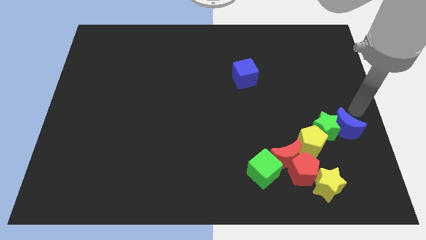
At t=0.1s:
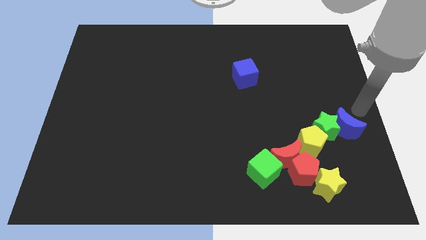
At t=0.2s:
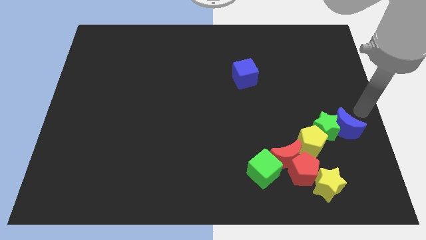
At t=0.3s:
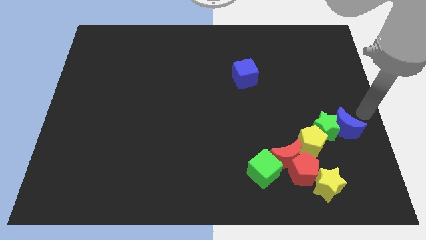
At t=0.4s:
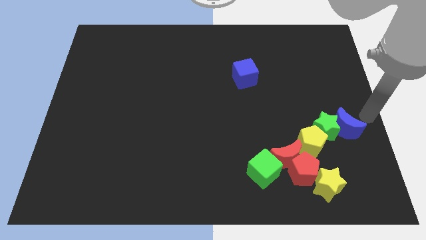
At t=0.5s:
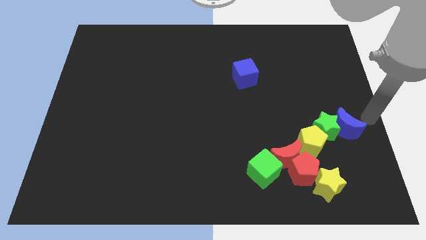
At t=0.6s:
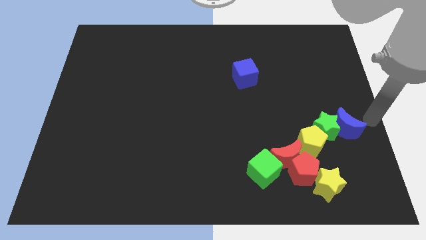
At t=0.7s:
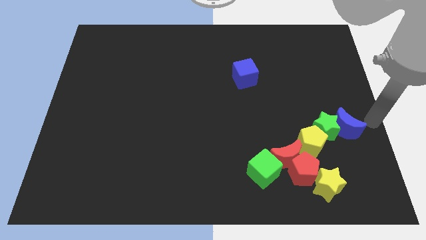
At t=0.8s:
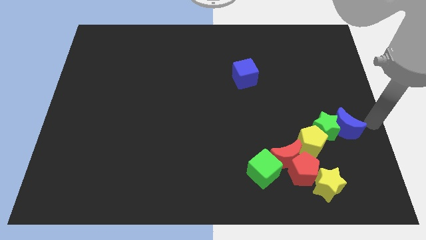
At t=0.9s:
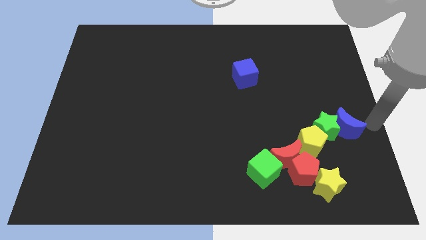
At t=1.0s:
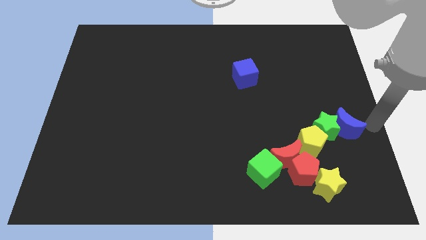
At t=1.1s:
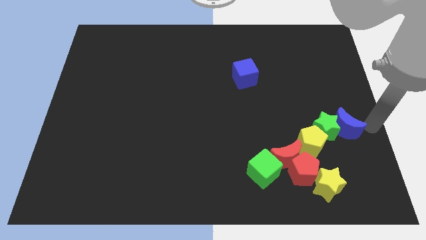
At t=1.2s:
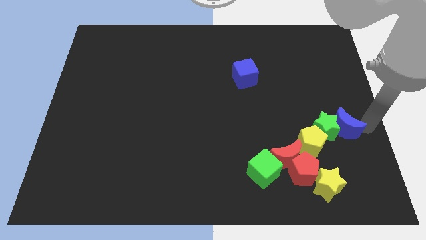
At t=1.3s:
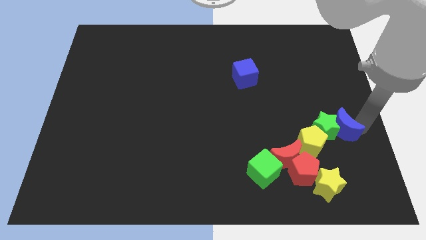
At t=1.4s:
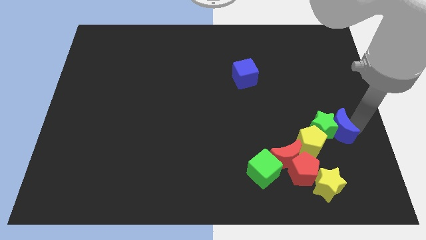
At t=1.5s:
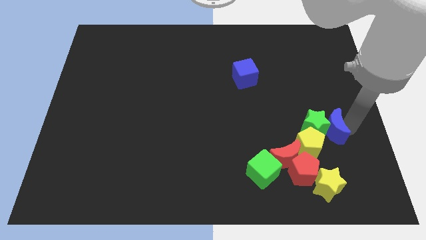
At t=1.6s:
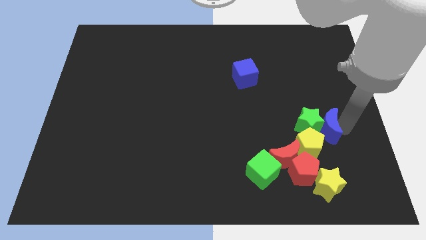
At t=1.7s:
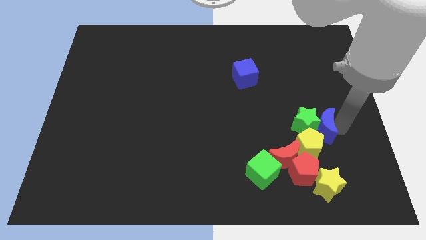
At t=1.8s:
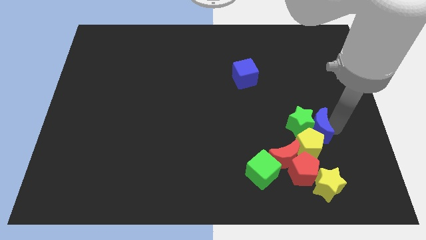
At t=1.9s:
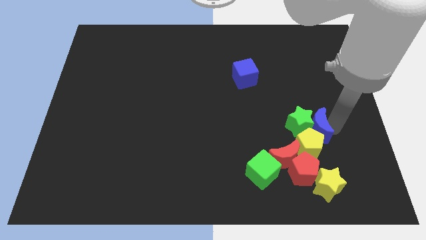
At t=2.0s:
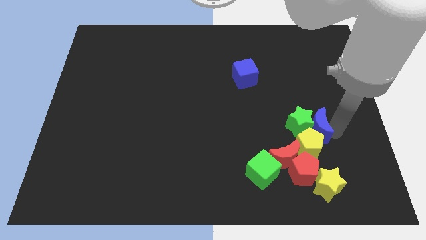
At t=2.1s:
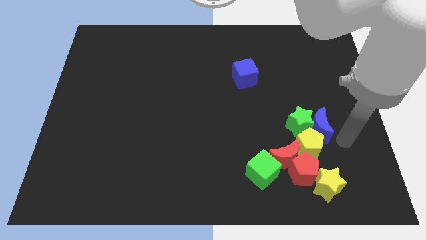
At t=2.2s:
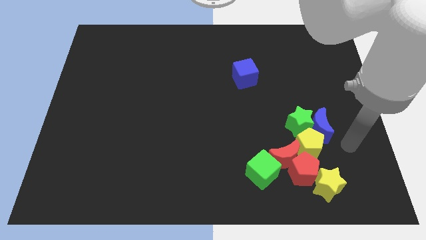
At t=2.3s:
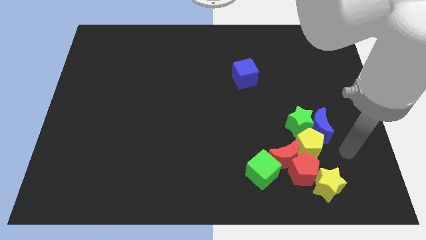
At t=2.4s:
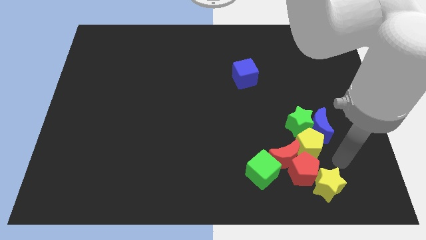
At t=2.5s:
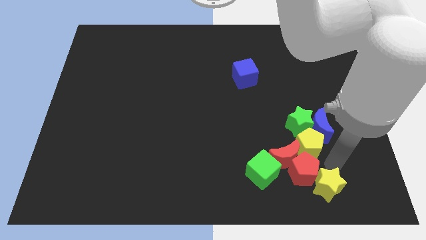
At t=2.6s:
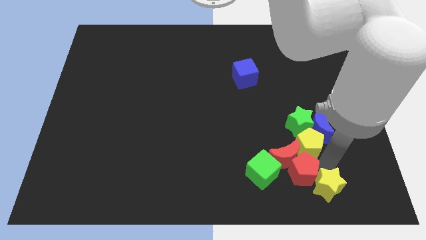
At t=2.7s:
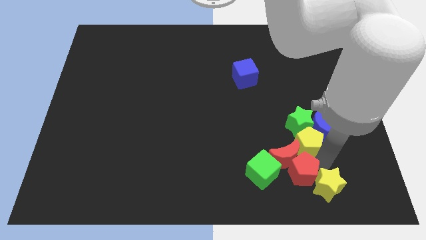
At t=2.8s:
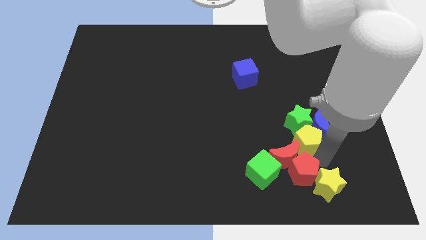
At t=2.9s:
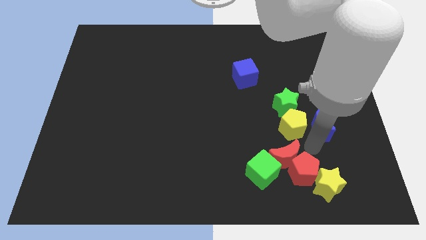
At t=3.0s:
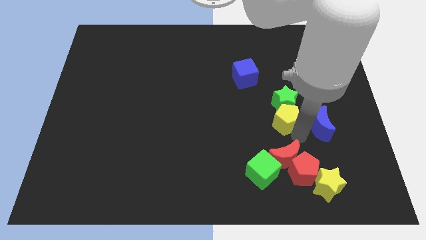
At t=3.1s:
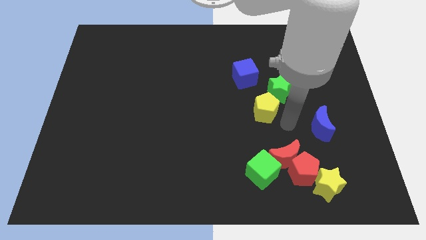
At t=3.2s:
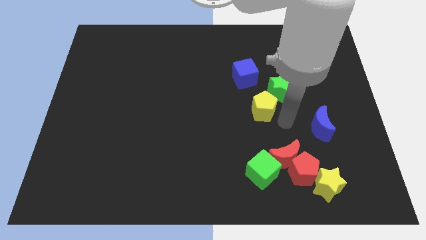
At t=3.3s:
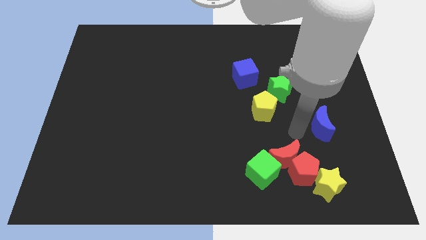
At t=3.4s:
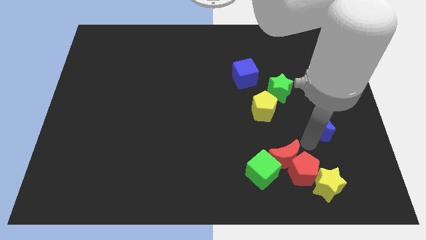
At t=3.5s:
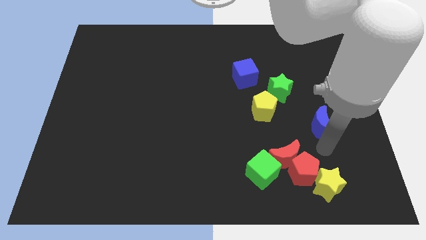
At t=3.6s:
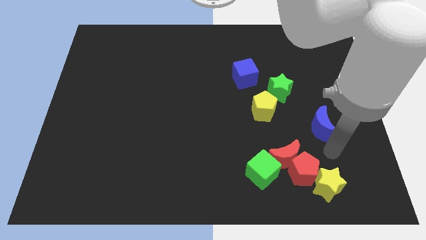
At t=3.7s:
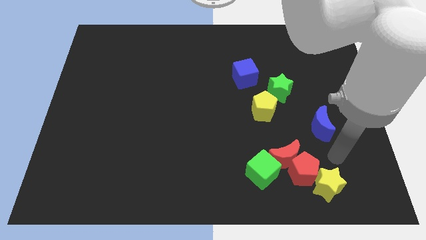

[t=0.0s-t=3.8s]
move the green star and yellow pentagon slightly up

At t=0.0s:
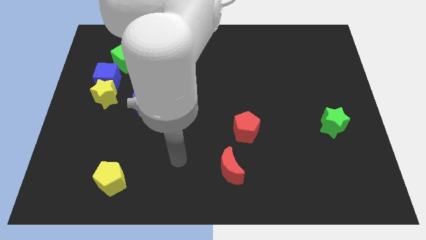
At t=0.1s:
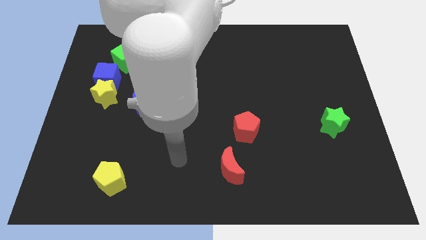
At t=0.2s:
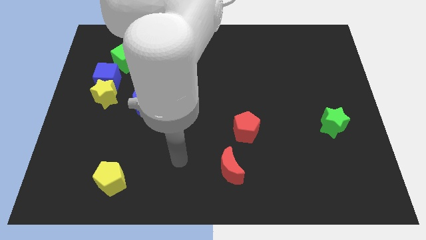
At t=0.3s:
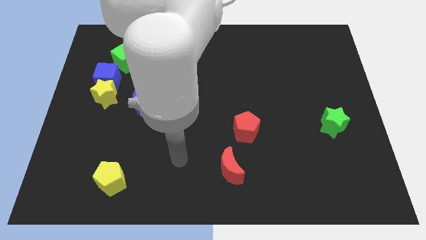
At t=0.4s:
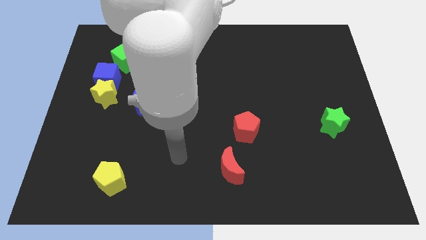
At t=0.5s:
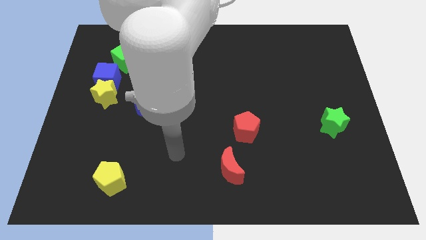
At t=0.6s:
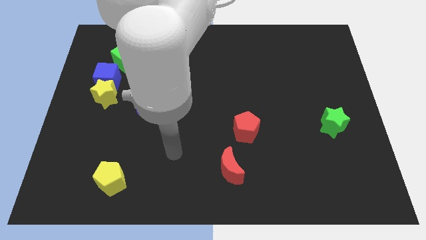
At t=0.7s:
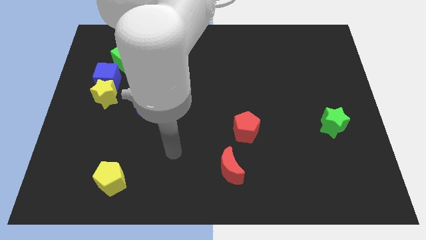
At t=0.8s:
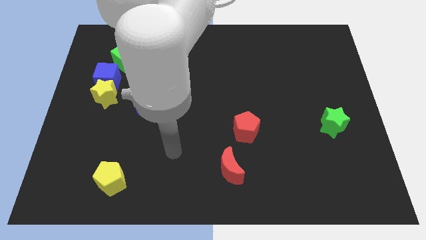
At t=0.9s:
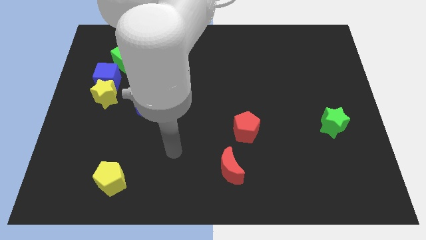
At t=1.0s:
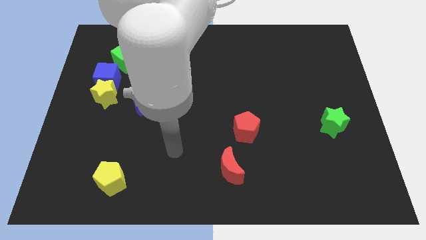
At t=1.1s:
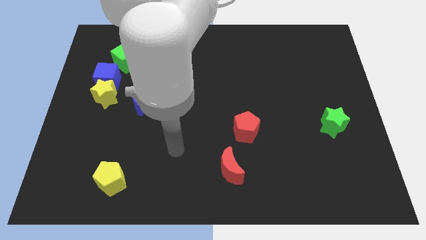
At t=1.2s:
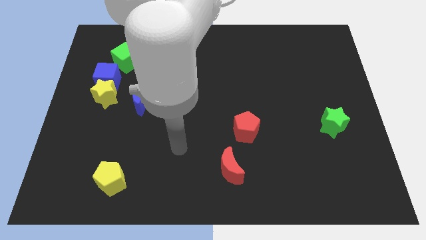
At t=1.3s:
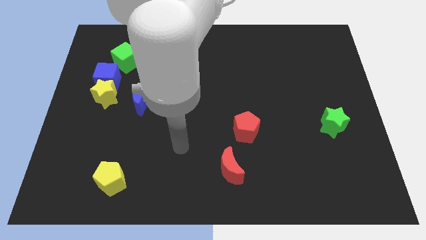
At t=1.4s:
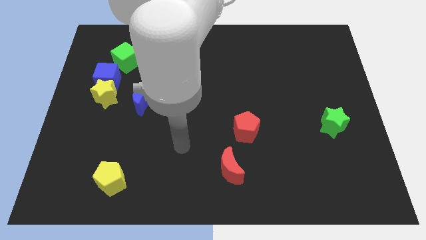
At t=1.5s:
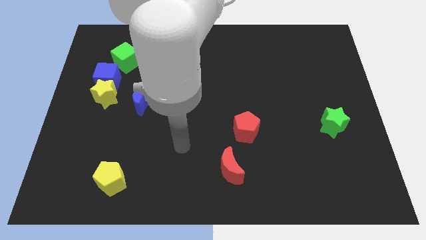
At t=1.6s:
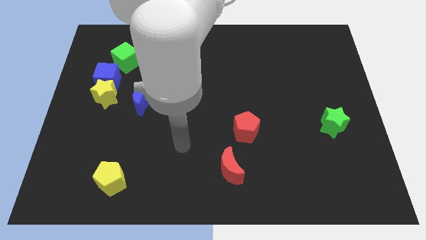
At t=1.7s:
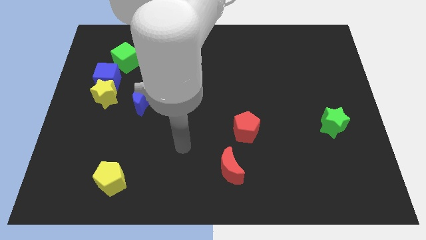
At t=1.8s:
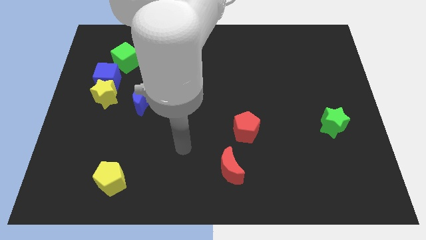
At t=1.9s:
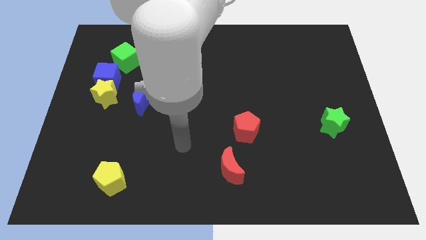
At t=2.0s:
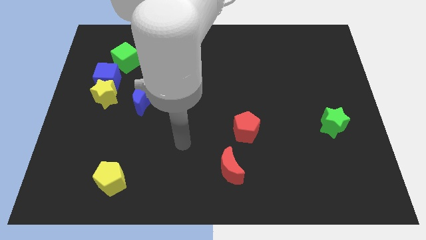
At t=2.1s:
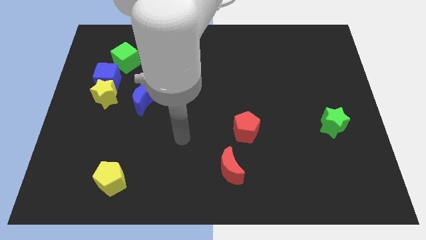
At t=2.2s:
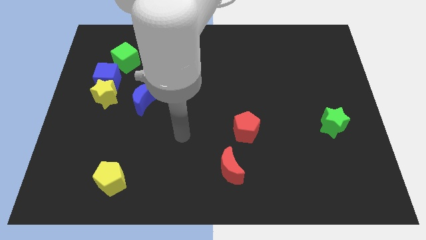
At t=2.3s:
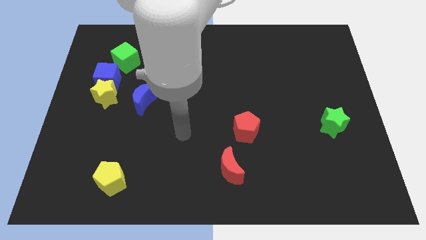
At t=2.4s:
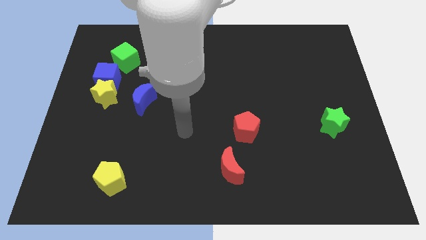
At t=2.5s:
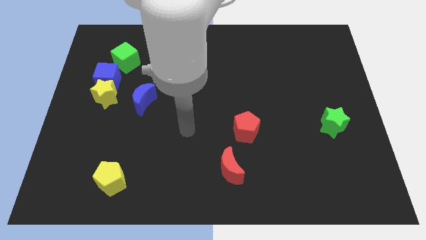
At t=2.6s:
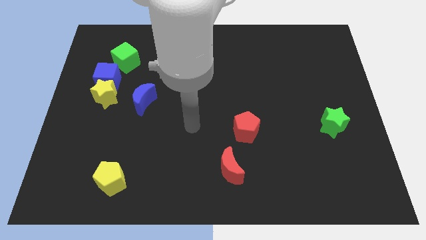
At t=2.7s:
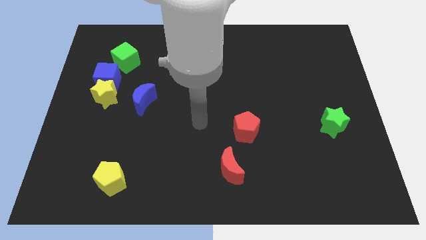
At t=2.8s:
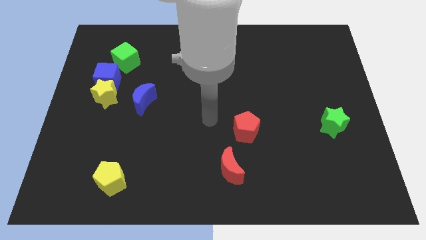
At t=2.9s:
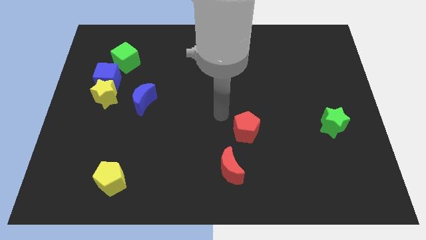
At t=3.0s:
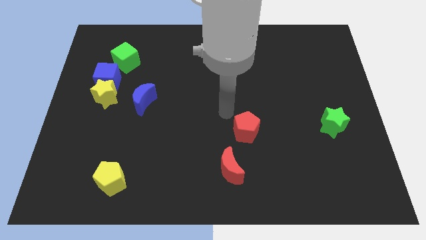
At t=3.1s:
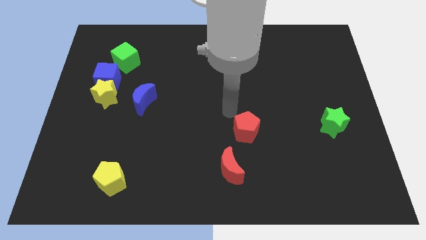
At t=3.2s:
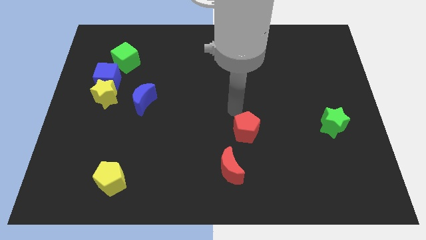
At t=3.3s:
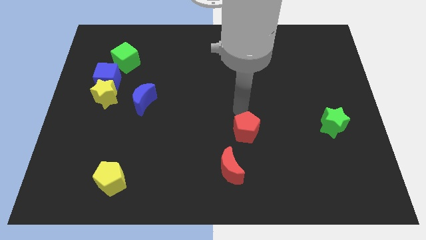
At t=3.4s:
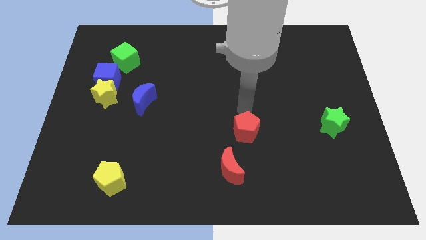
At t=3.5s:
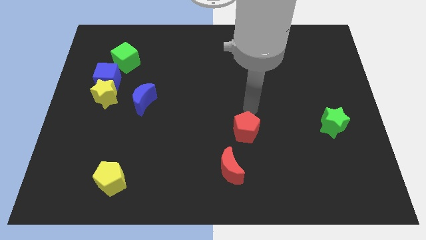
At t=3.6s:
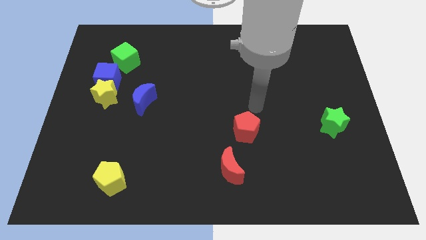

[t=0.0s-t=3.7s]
put your hand above the red pentagon

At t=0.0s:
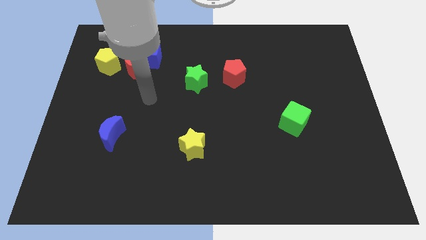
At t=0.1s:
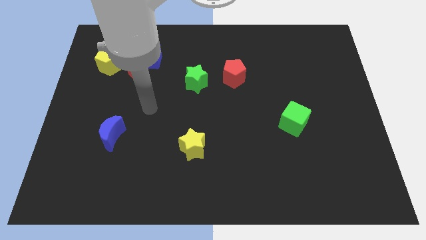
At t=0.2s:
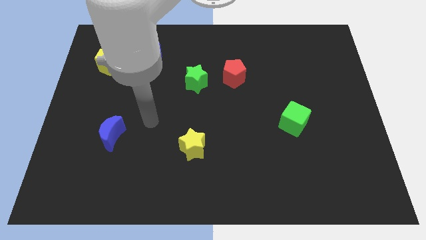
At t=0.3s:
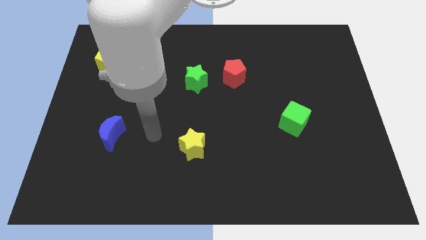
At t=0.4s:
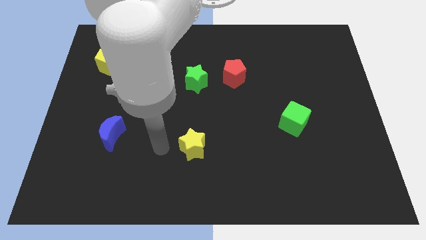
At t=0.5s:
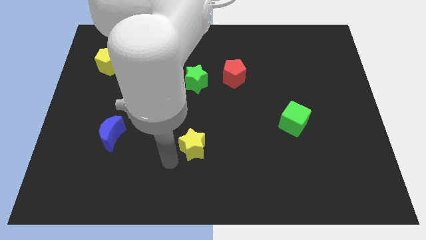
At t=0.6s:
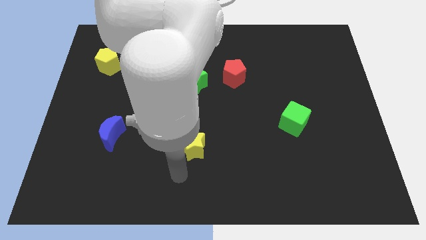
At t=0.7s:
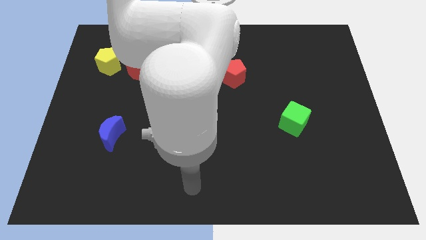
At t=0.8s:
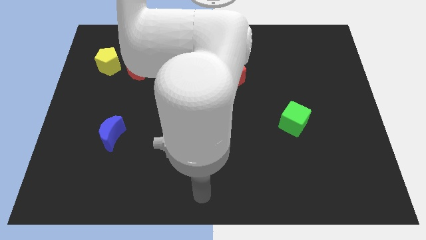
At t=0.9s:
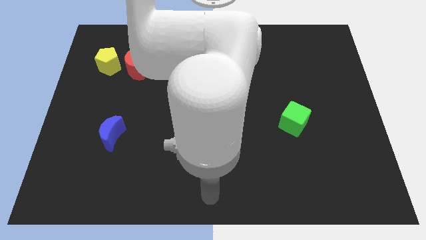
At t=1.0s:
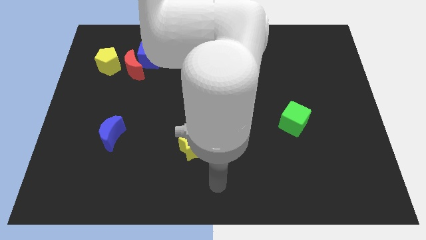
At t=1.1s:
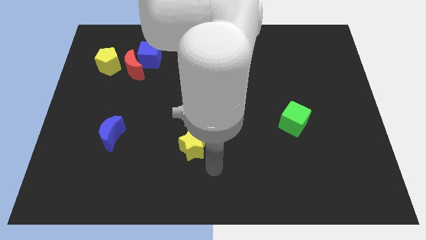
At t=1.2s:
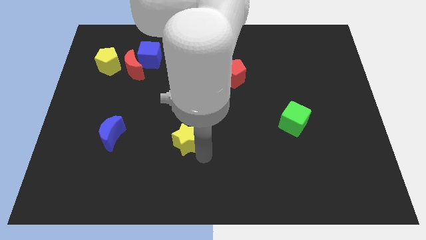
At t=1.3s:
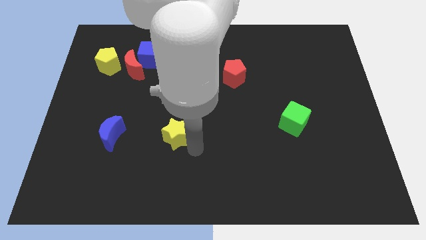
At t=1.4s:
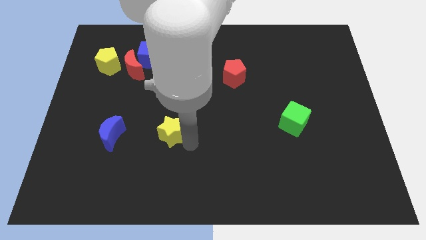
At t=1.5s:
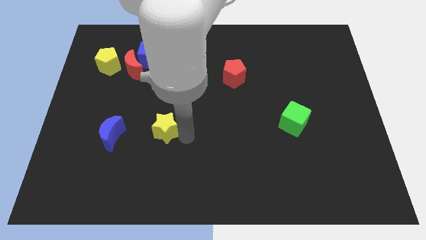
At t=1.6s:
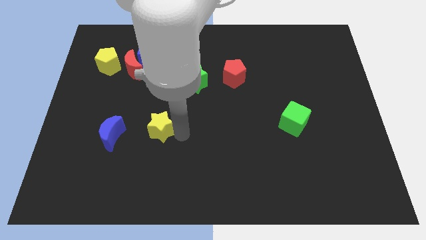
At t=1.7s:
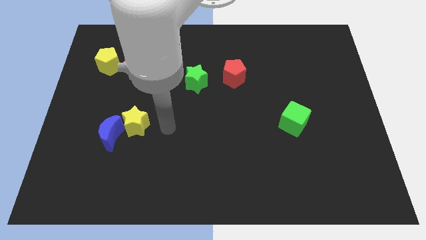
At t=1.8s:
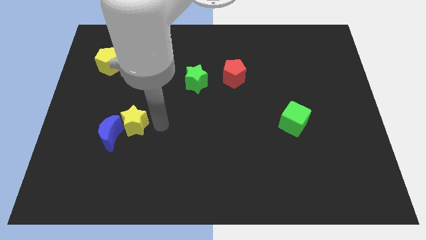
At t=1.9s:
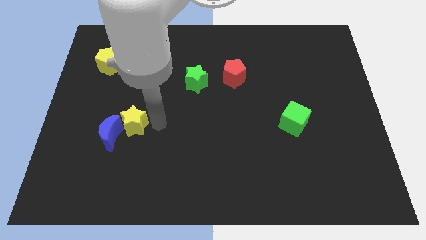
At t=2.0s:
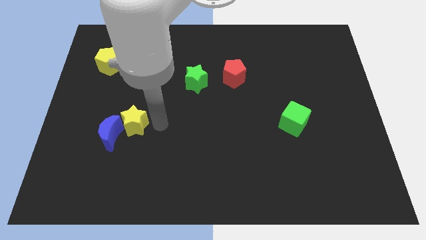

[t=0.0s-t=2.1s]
place the yellow star to the top right of the blue cube
